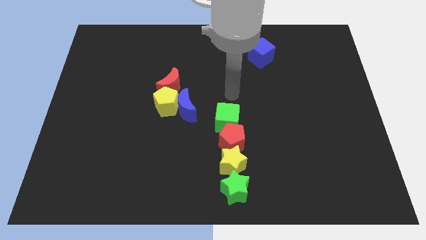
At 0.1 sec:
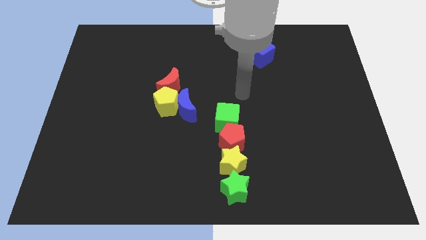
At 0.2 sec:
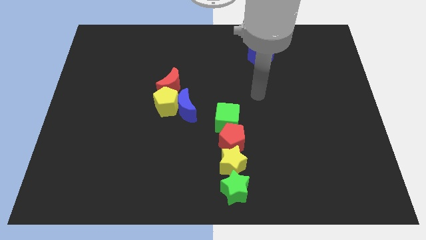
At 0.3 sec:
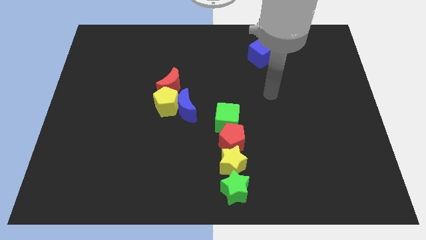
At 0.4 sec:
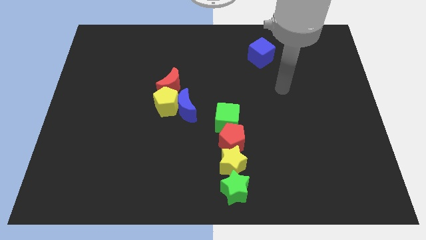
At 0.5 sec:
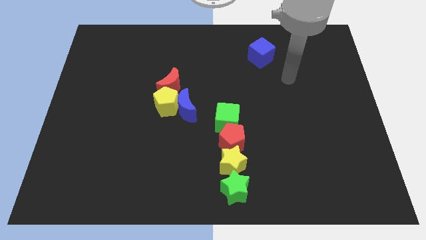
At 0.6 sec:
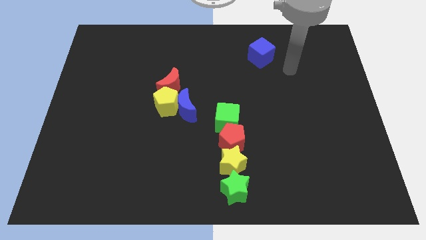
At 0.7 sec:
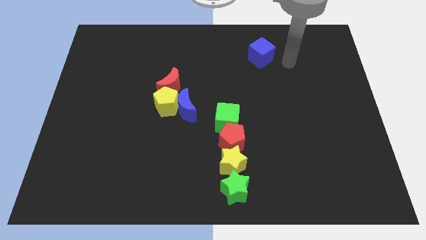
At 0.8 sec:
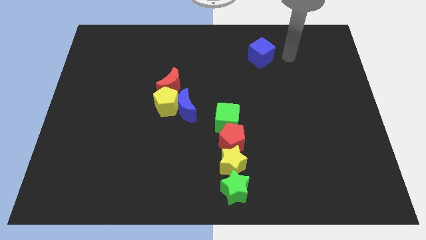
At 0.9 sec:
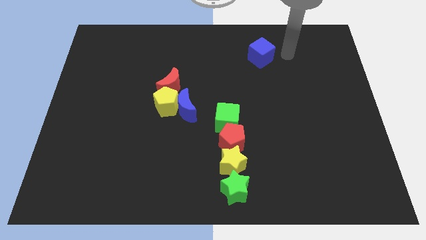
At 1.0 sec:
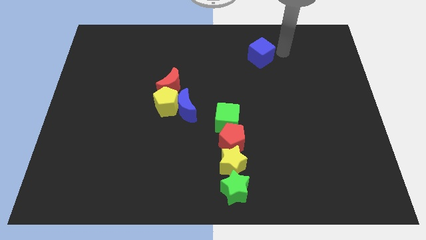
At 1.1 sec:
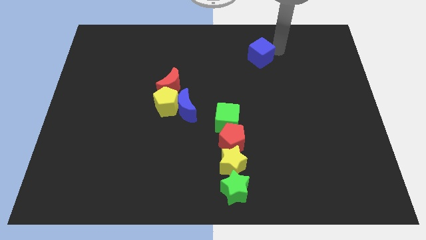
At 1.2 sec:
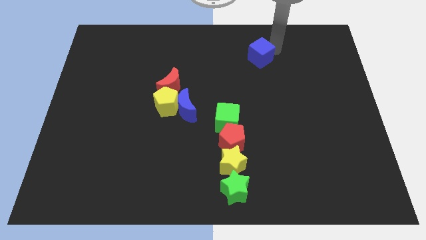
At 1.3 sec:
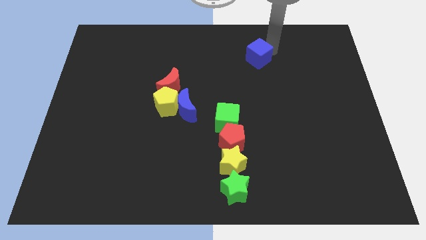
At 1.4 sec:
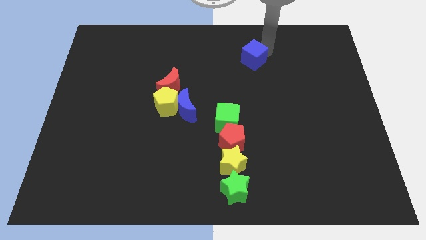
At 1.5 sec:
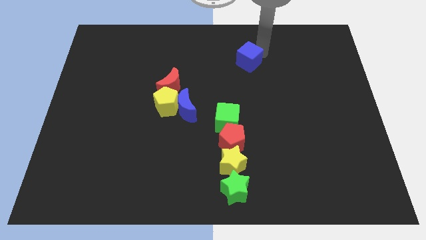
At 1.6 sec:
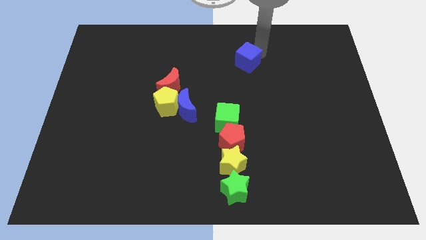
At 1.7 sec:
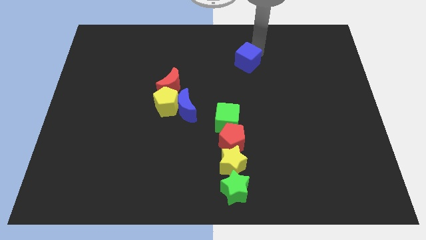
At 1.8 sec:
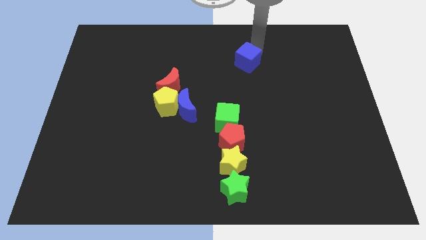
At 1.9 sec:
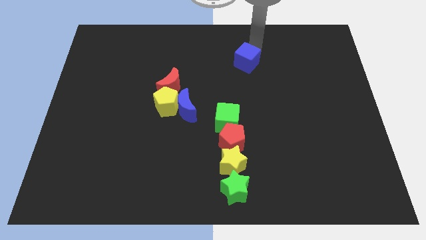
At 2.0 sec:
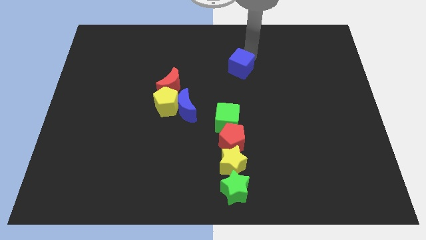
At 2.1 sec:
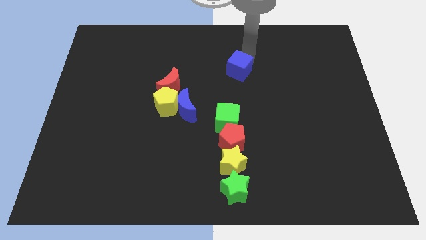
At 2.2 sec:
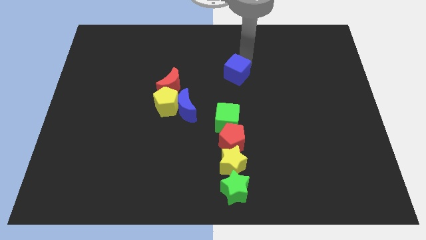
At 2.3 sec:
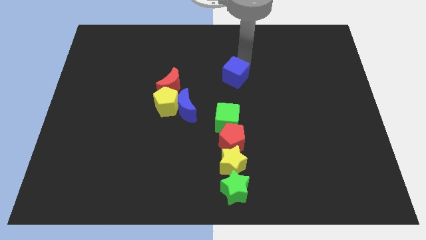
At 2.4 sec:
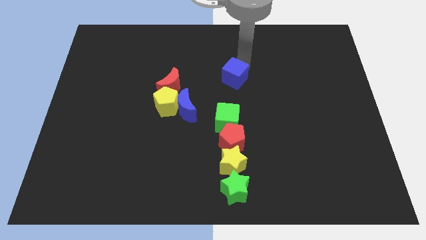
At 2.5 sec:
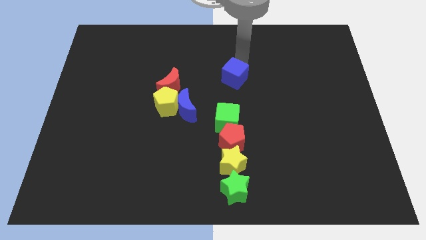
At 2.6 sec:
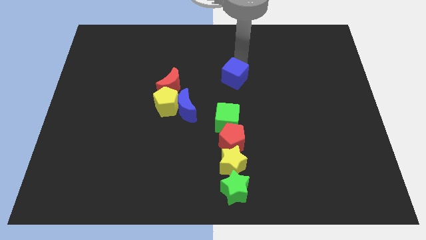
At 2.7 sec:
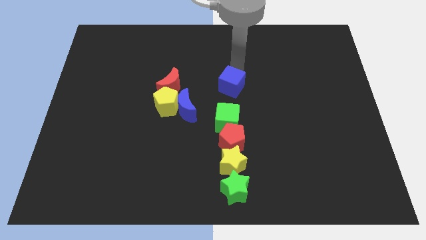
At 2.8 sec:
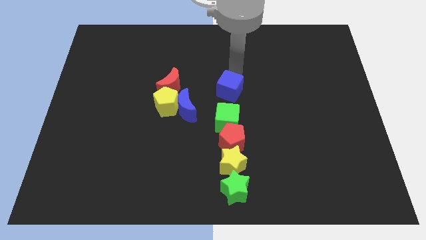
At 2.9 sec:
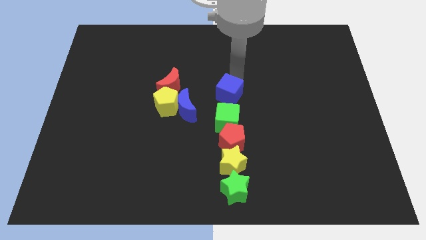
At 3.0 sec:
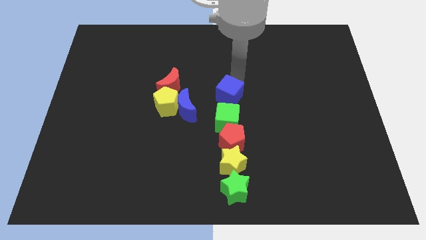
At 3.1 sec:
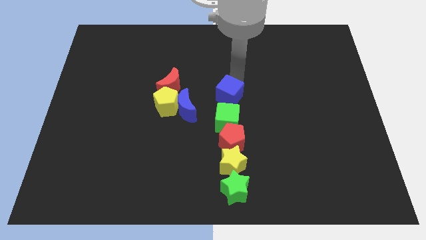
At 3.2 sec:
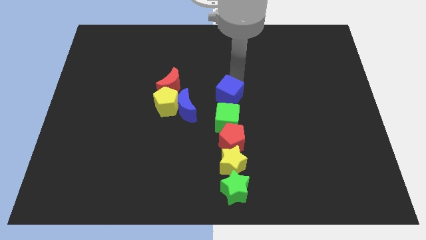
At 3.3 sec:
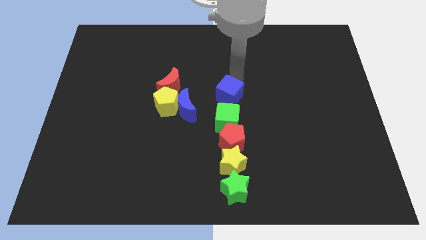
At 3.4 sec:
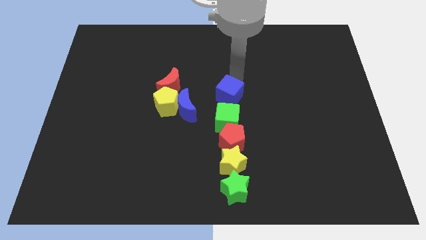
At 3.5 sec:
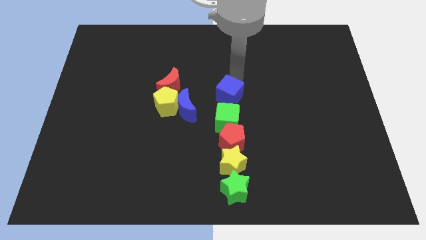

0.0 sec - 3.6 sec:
move the blue cube on the top of the green cube

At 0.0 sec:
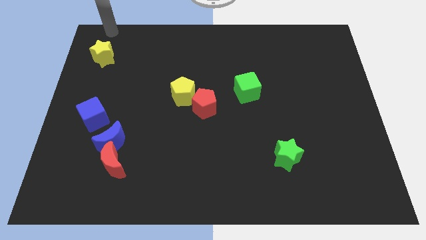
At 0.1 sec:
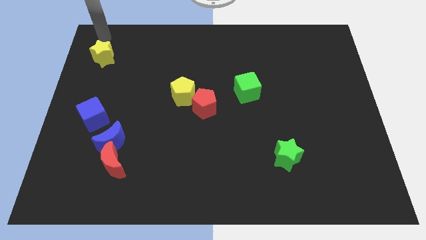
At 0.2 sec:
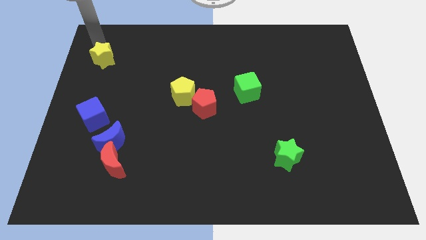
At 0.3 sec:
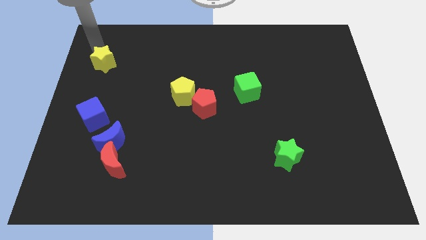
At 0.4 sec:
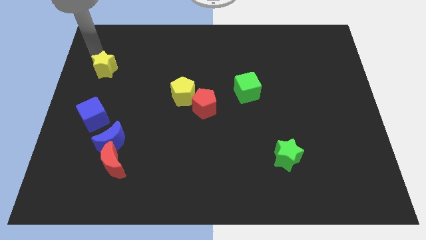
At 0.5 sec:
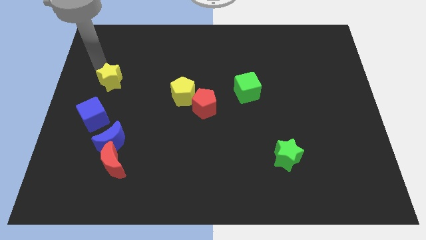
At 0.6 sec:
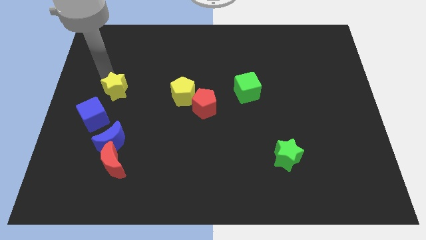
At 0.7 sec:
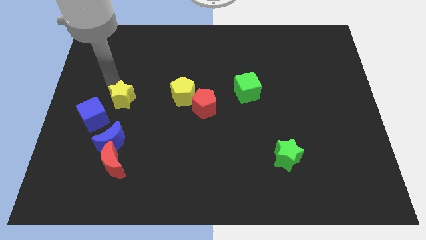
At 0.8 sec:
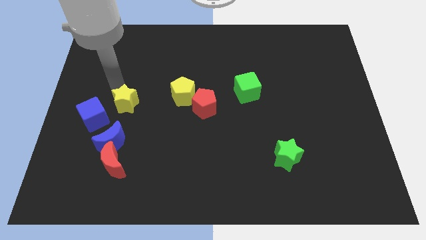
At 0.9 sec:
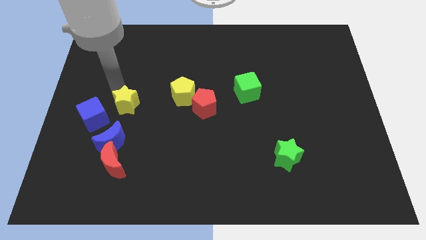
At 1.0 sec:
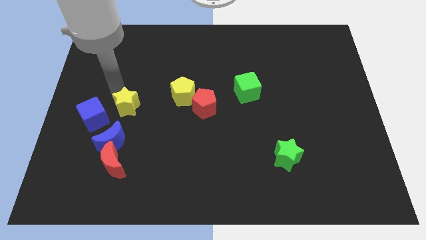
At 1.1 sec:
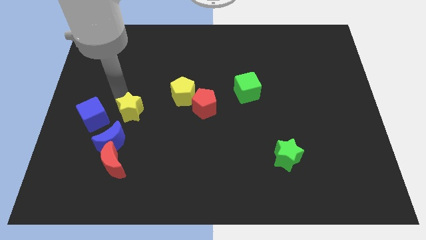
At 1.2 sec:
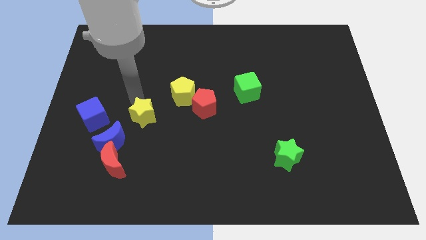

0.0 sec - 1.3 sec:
push the yellow star to the right of the blue cube

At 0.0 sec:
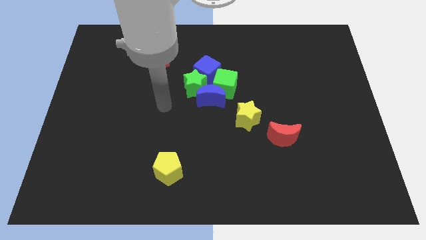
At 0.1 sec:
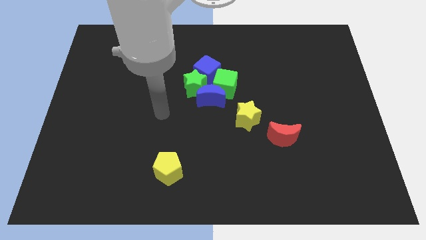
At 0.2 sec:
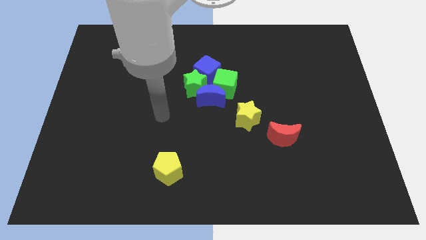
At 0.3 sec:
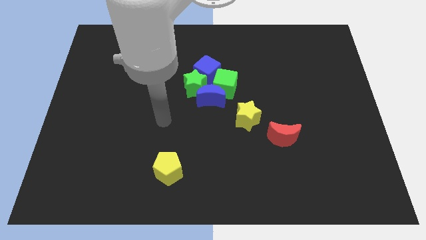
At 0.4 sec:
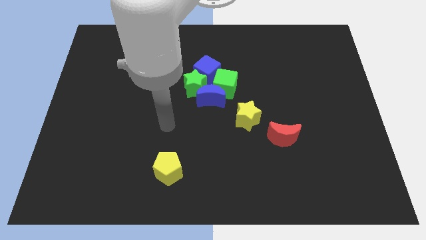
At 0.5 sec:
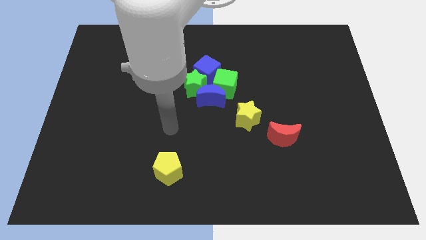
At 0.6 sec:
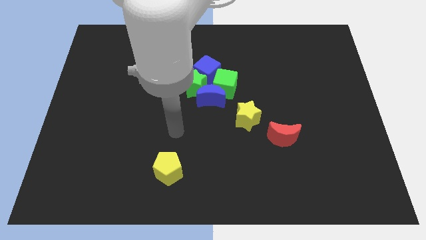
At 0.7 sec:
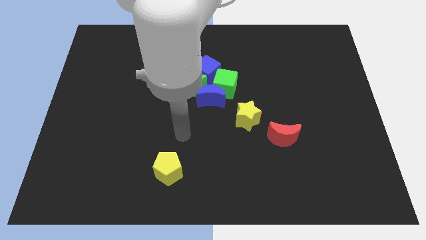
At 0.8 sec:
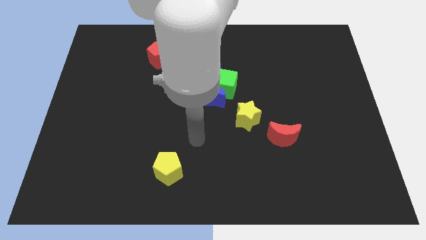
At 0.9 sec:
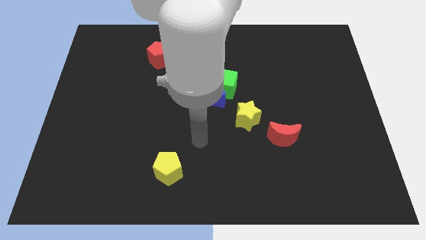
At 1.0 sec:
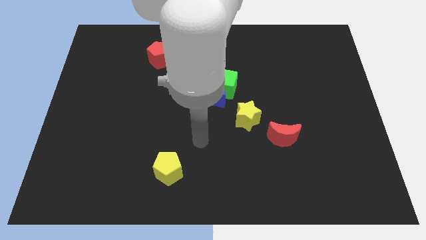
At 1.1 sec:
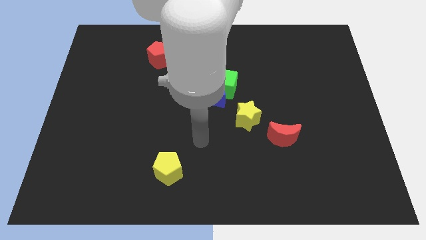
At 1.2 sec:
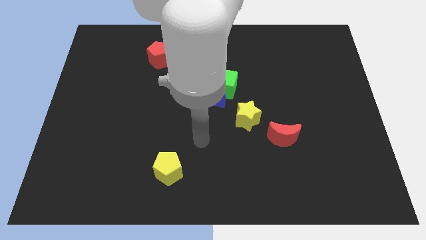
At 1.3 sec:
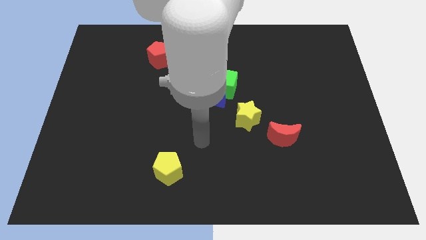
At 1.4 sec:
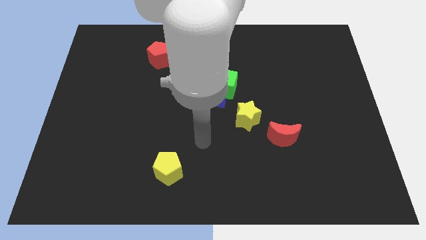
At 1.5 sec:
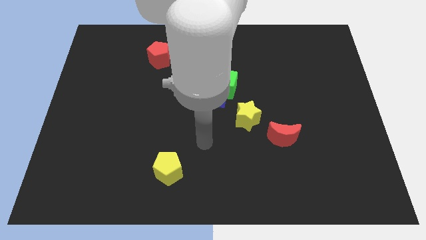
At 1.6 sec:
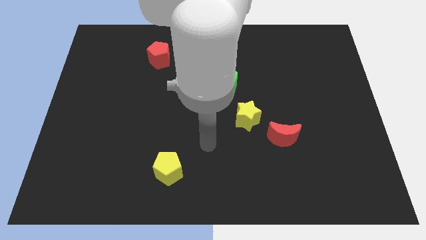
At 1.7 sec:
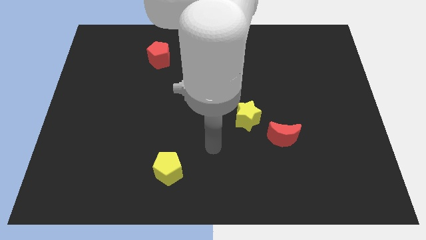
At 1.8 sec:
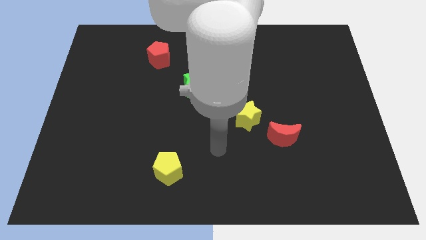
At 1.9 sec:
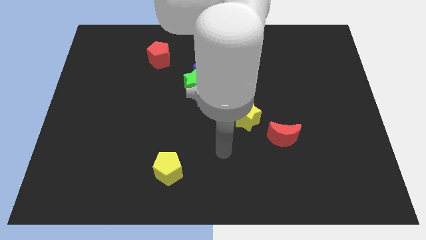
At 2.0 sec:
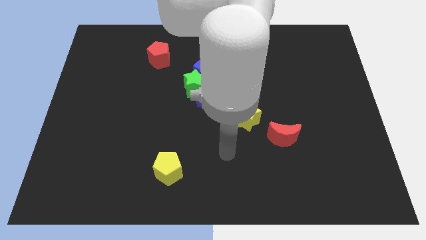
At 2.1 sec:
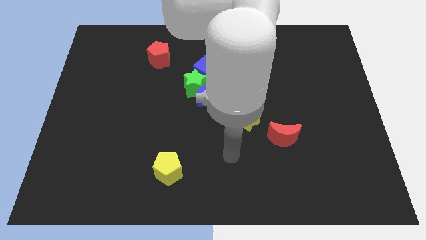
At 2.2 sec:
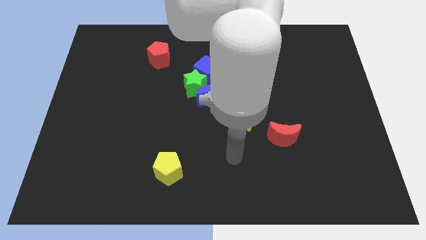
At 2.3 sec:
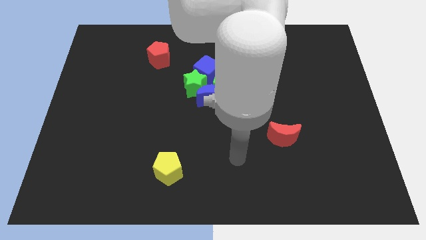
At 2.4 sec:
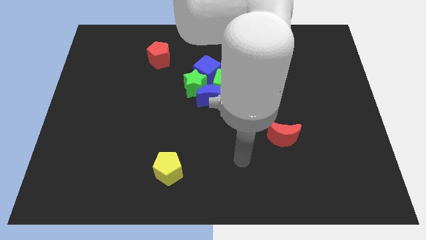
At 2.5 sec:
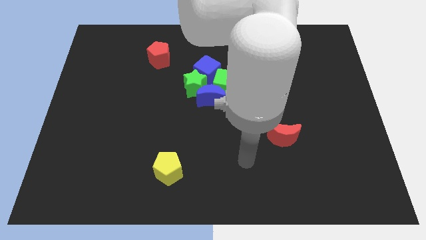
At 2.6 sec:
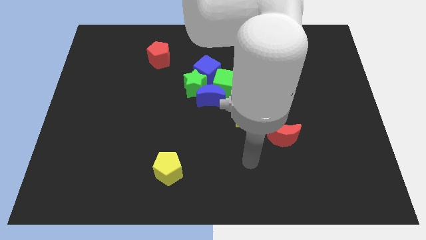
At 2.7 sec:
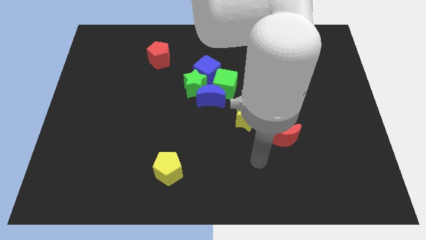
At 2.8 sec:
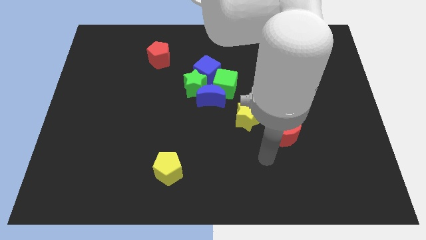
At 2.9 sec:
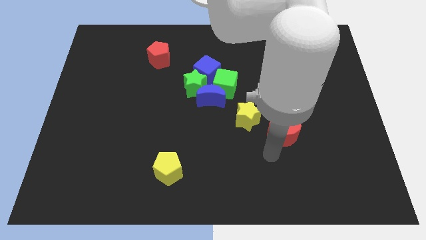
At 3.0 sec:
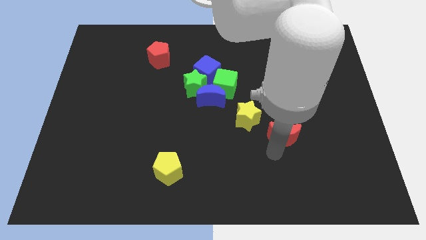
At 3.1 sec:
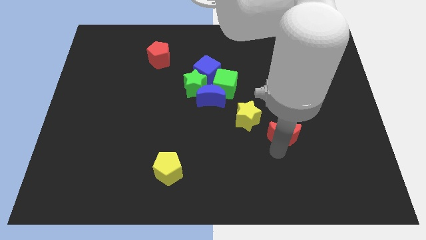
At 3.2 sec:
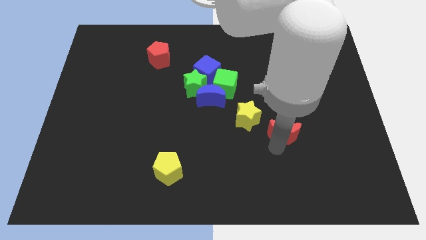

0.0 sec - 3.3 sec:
place the arm down to the red moon

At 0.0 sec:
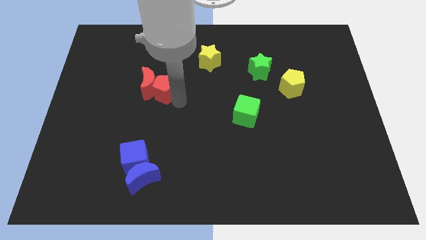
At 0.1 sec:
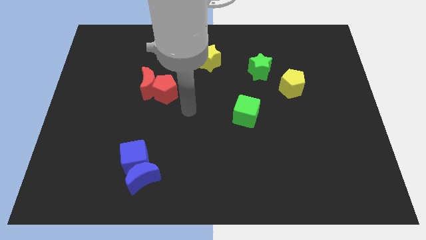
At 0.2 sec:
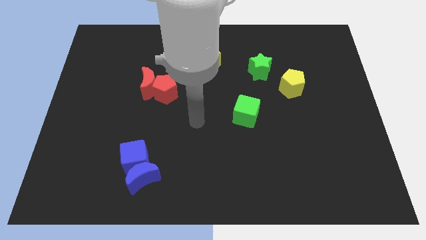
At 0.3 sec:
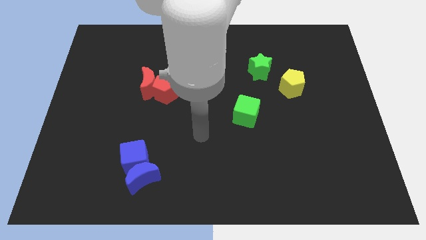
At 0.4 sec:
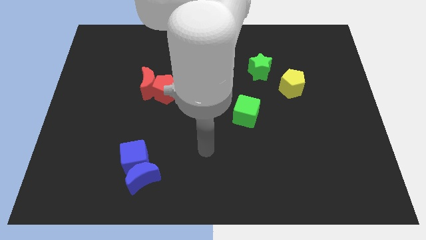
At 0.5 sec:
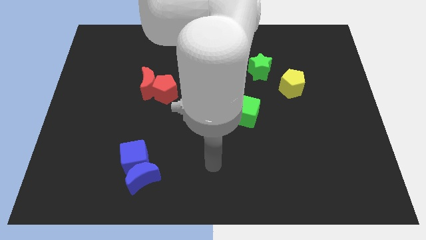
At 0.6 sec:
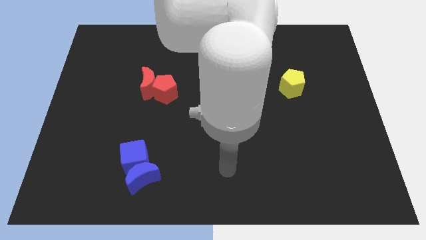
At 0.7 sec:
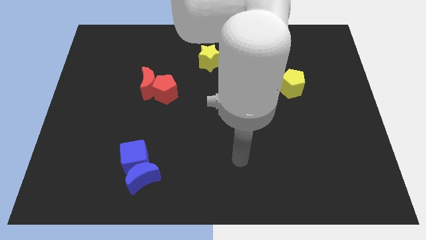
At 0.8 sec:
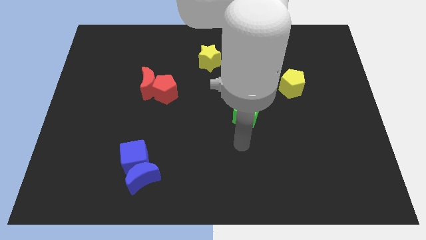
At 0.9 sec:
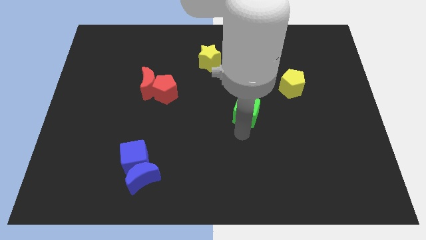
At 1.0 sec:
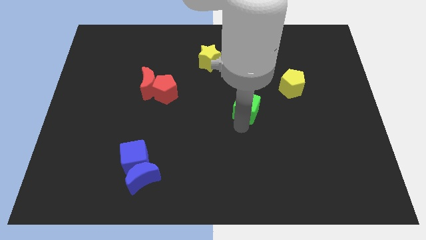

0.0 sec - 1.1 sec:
go away from the red pentagon
